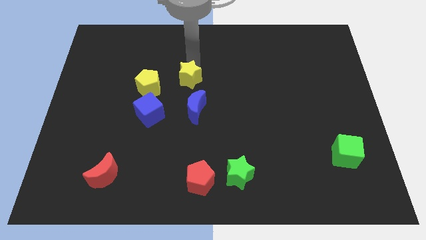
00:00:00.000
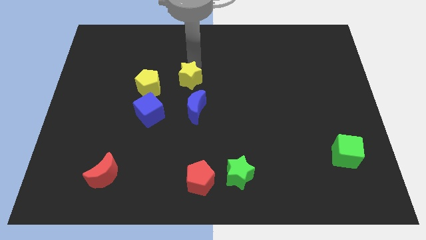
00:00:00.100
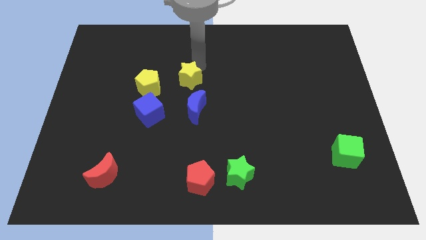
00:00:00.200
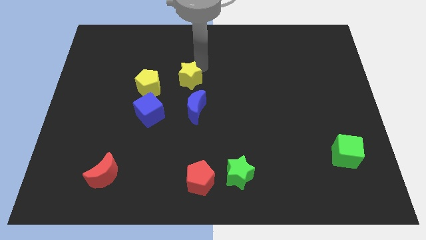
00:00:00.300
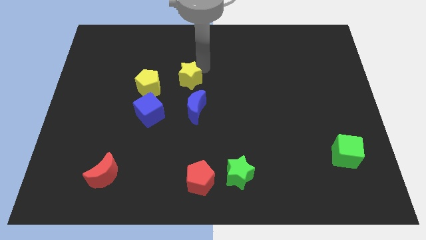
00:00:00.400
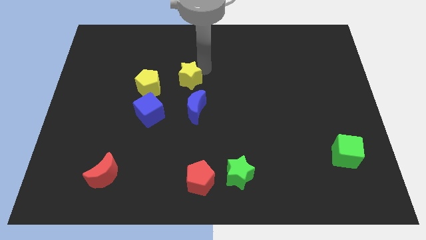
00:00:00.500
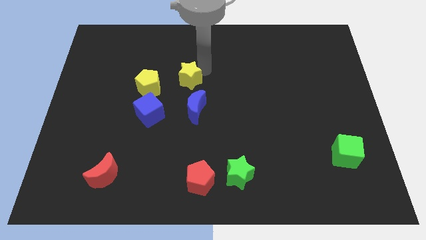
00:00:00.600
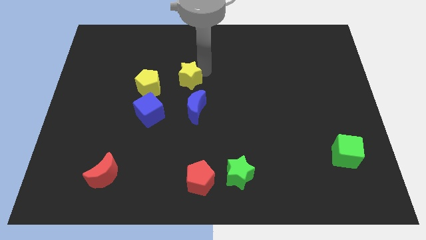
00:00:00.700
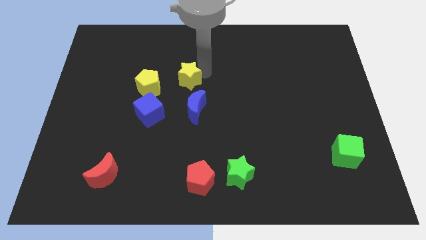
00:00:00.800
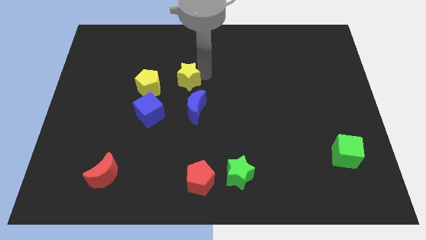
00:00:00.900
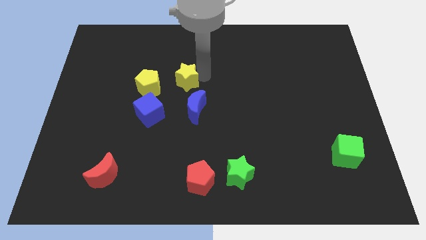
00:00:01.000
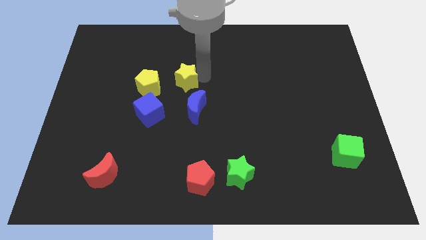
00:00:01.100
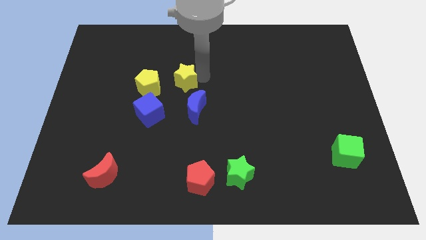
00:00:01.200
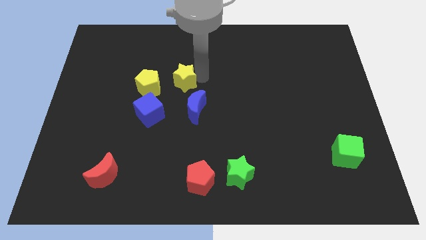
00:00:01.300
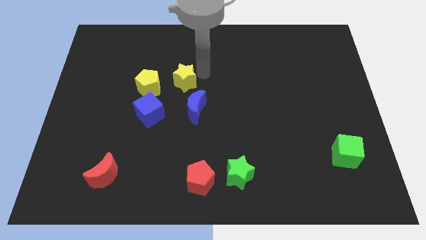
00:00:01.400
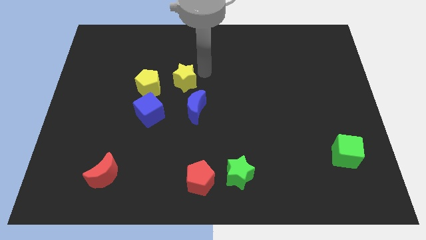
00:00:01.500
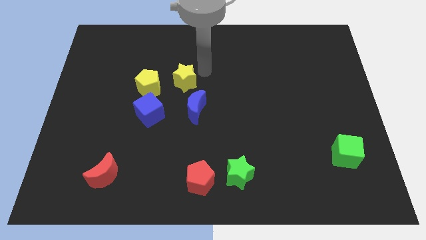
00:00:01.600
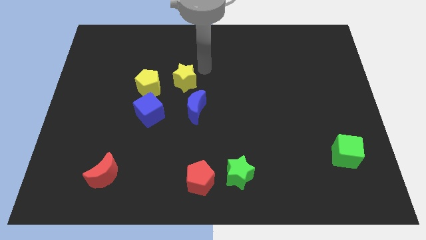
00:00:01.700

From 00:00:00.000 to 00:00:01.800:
put the yellow star on the right side of the yellow pentagon

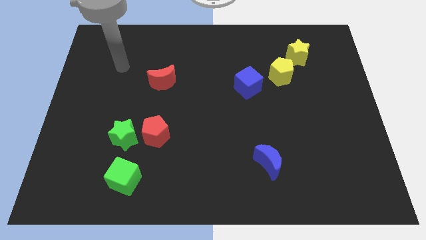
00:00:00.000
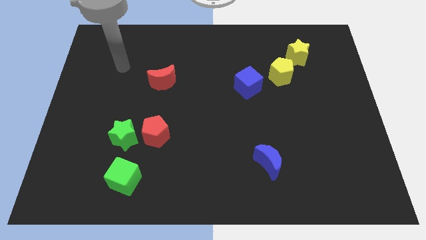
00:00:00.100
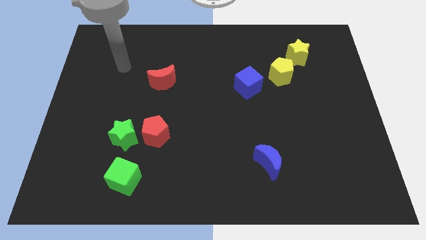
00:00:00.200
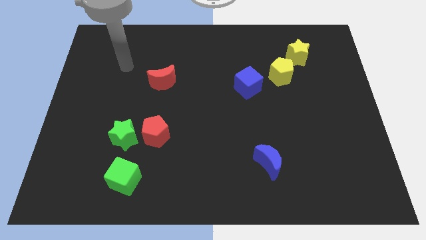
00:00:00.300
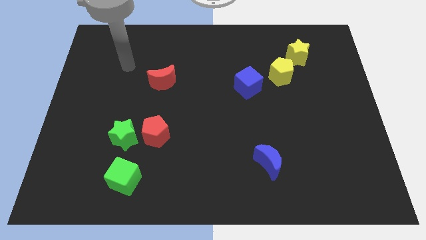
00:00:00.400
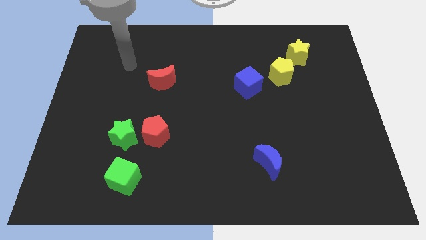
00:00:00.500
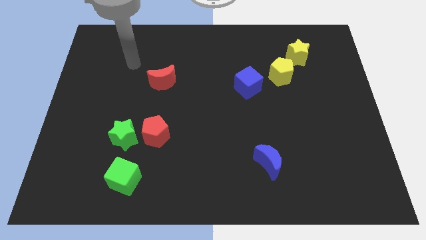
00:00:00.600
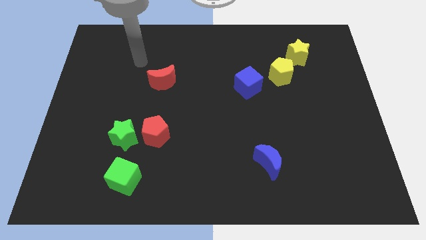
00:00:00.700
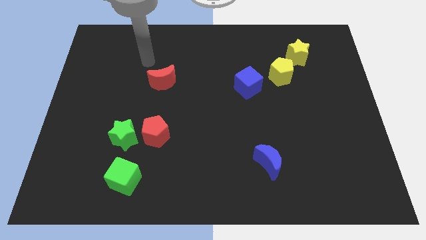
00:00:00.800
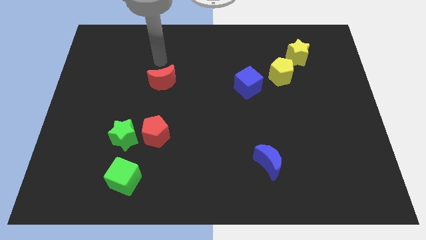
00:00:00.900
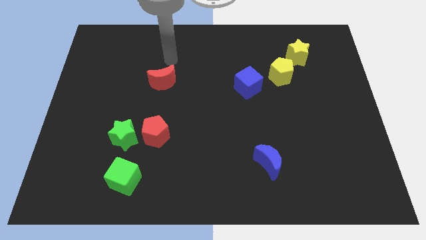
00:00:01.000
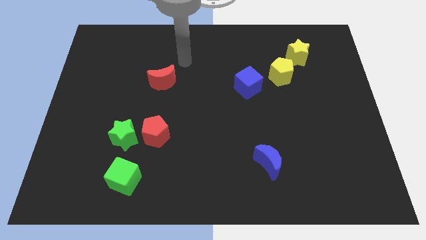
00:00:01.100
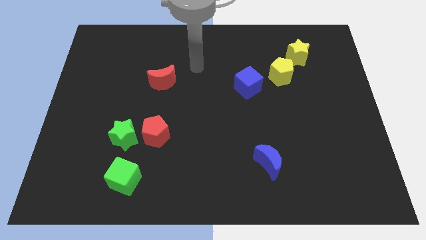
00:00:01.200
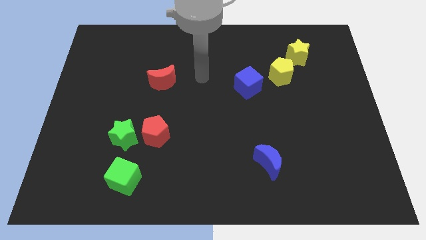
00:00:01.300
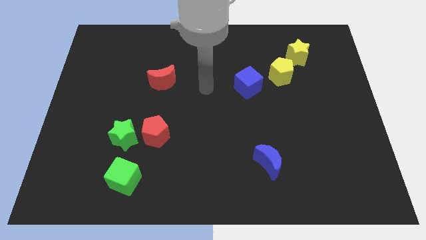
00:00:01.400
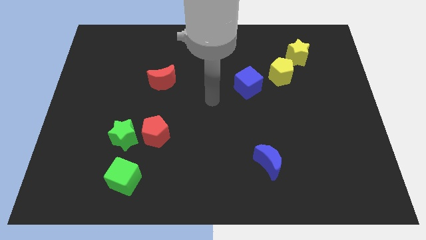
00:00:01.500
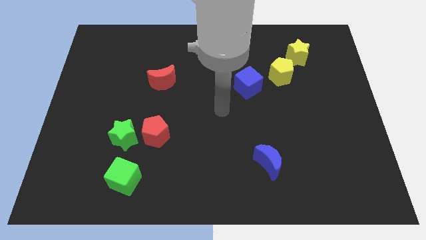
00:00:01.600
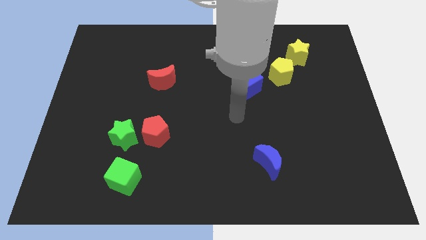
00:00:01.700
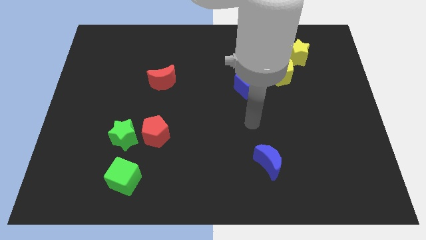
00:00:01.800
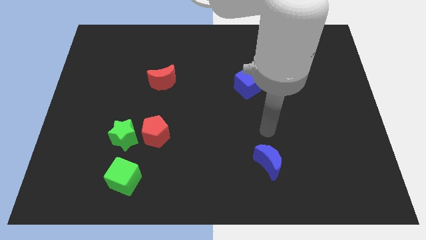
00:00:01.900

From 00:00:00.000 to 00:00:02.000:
place your arm to the top of the blue crescent

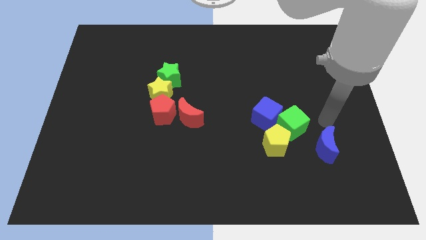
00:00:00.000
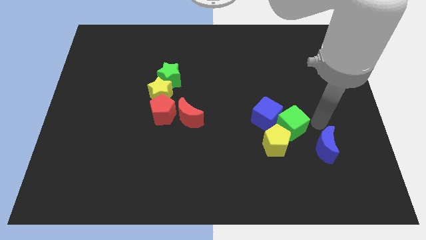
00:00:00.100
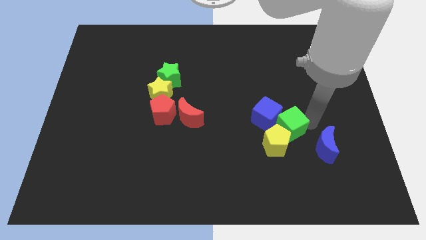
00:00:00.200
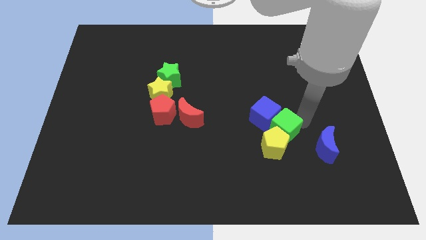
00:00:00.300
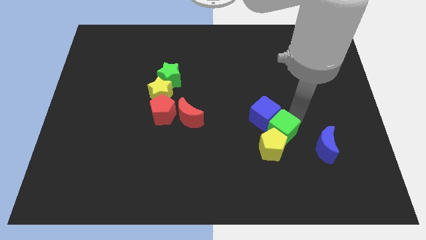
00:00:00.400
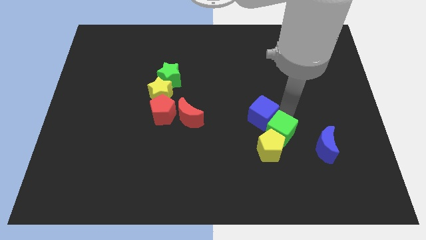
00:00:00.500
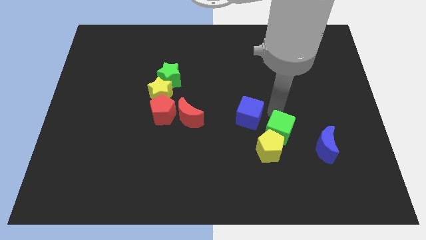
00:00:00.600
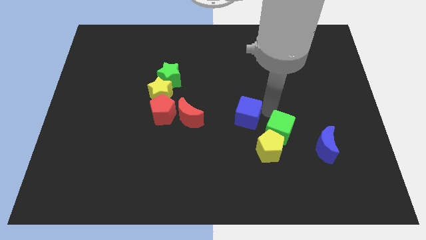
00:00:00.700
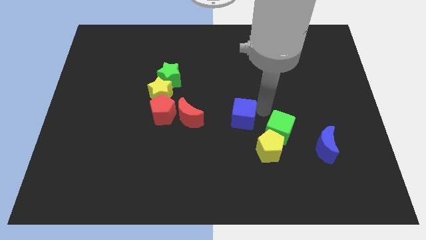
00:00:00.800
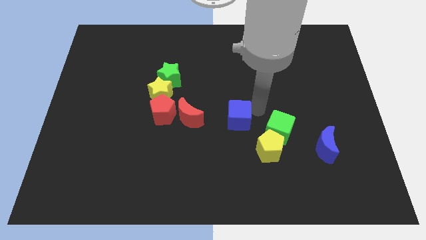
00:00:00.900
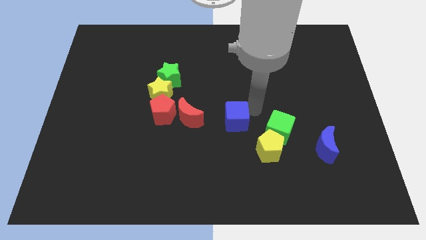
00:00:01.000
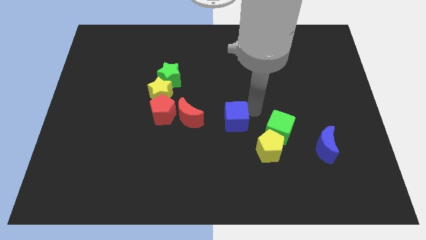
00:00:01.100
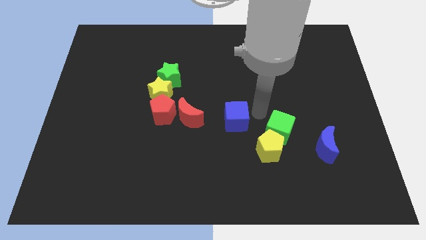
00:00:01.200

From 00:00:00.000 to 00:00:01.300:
separate the blue cube from the green cube

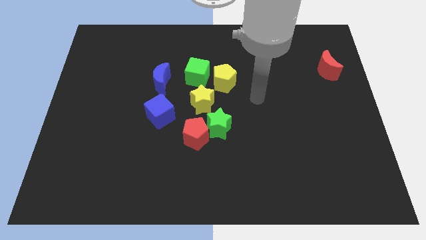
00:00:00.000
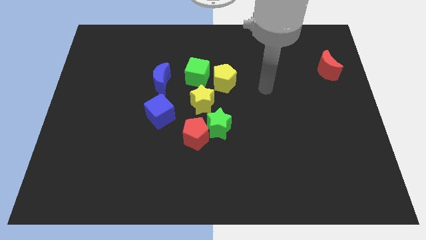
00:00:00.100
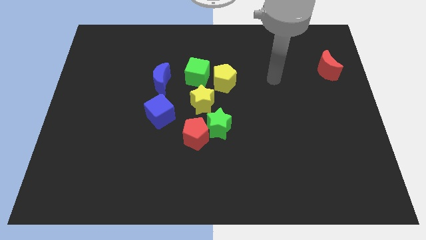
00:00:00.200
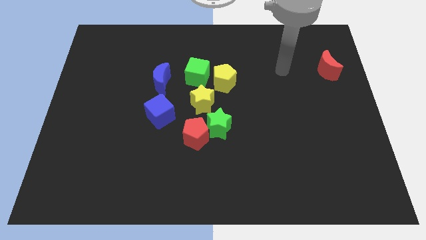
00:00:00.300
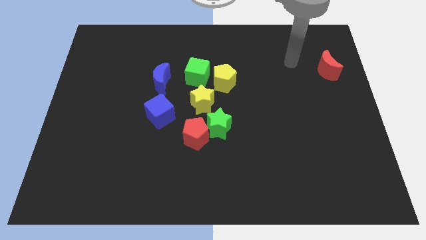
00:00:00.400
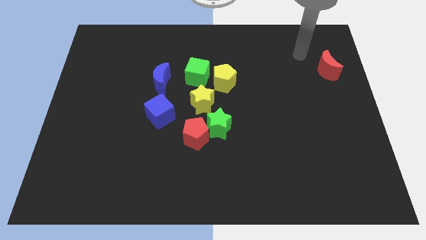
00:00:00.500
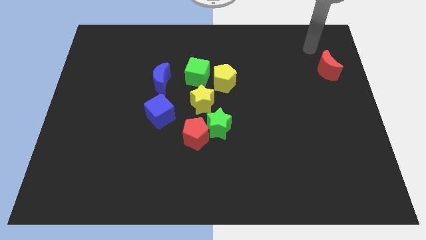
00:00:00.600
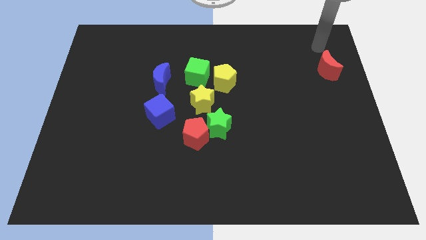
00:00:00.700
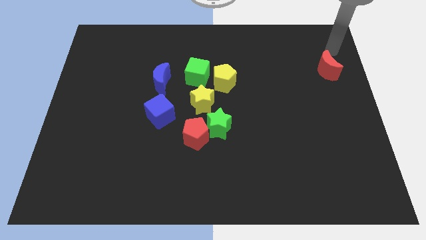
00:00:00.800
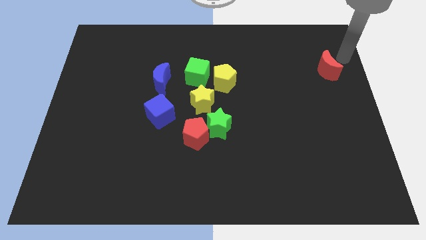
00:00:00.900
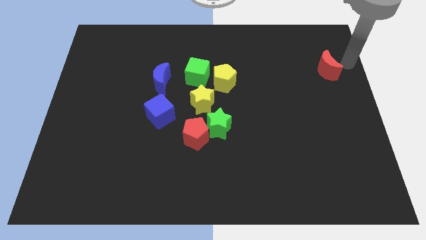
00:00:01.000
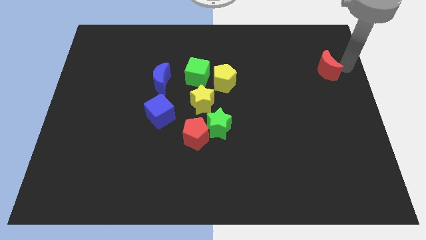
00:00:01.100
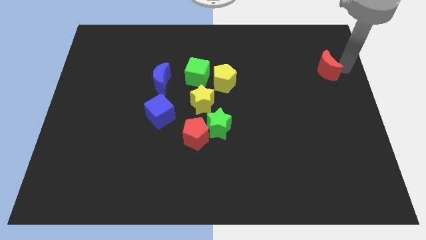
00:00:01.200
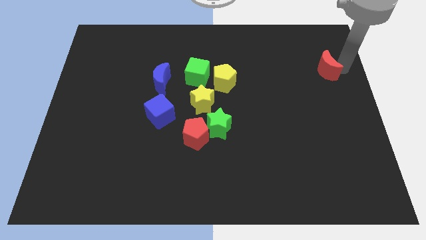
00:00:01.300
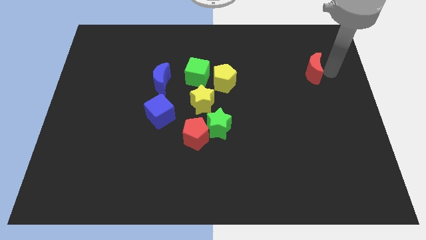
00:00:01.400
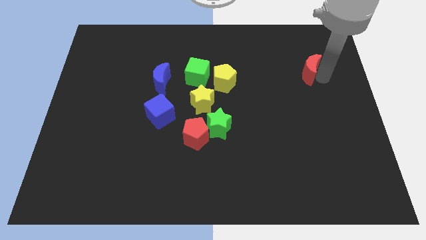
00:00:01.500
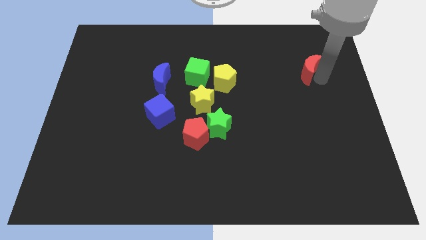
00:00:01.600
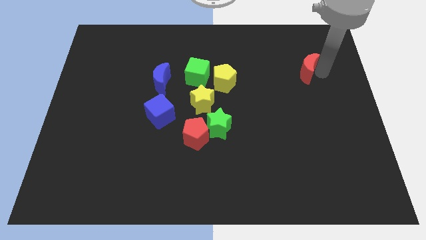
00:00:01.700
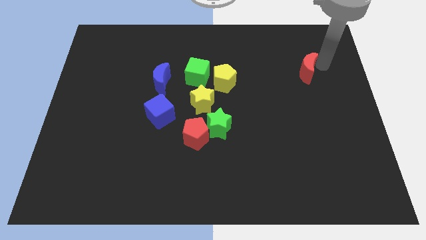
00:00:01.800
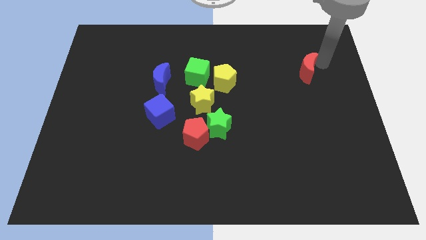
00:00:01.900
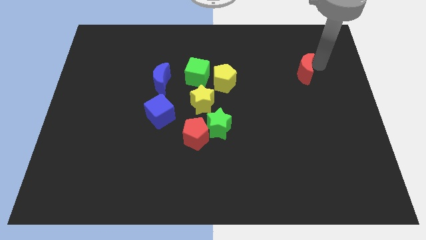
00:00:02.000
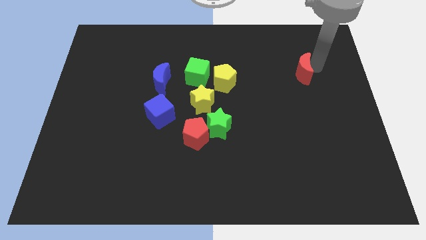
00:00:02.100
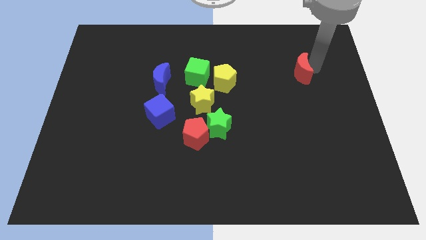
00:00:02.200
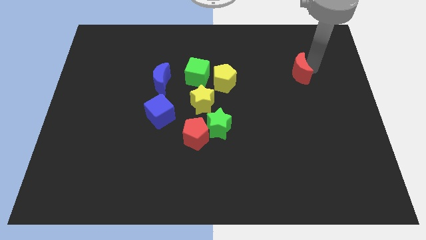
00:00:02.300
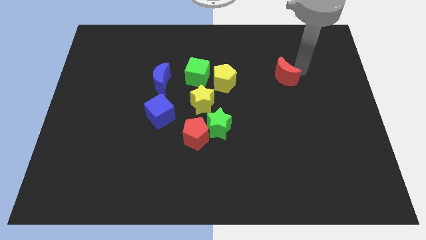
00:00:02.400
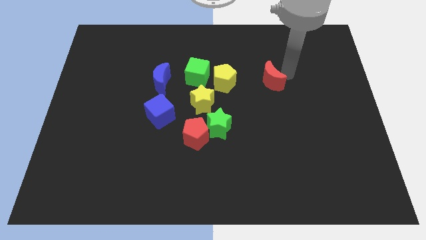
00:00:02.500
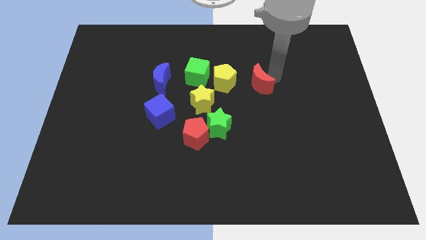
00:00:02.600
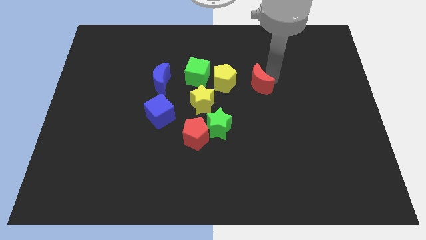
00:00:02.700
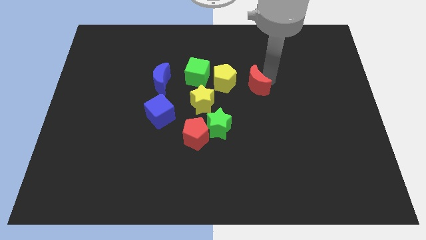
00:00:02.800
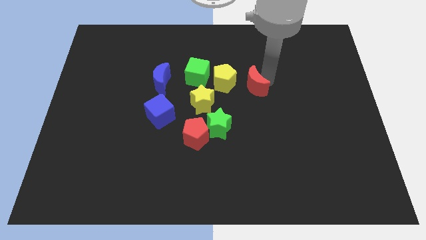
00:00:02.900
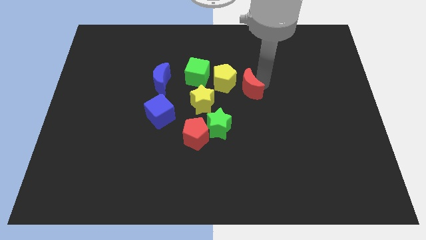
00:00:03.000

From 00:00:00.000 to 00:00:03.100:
move red moon towards the center

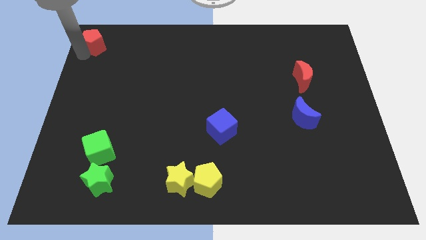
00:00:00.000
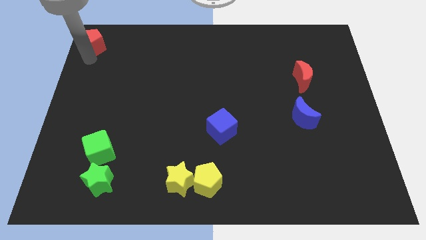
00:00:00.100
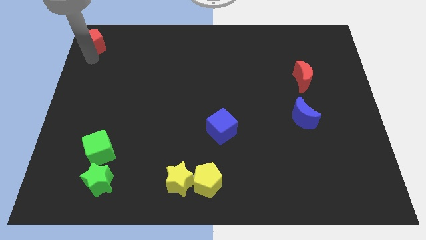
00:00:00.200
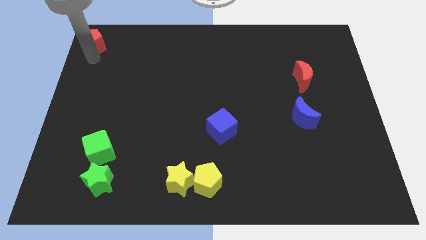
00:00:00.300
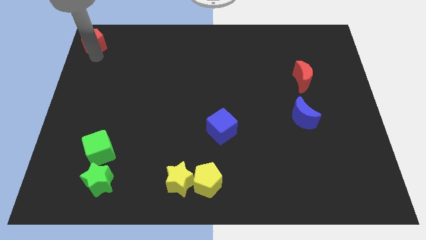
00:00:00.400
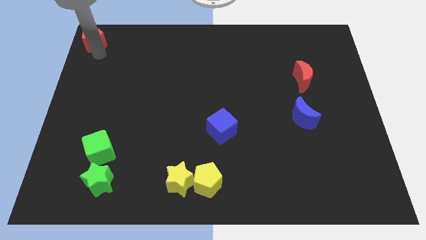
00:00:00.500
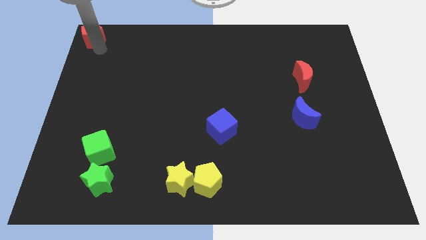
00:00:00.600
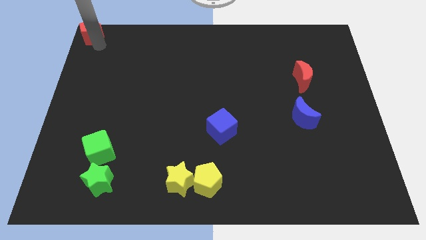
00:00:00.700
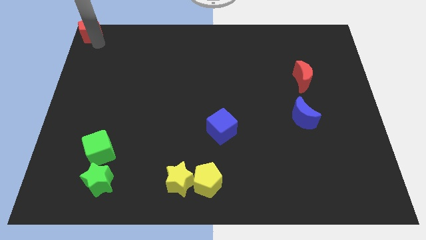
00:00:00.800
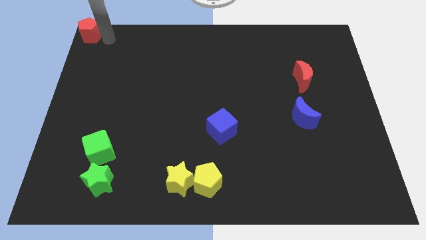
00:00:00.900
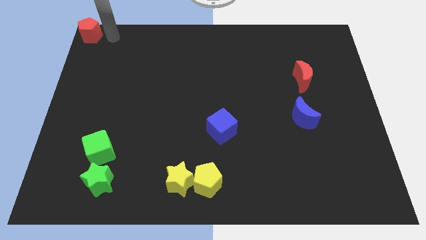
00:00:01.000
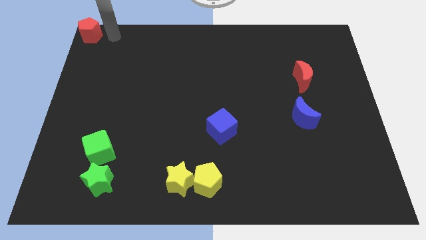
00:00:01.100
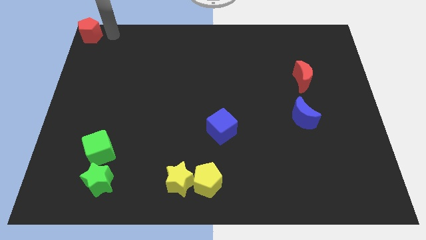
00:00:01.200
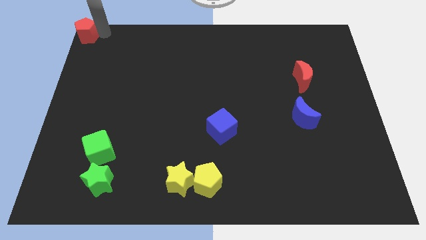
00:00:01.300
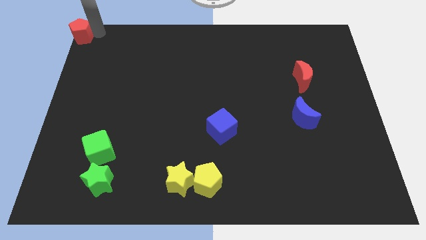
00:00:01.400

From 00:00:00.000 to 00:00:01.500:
push the red pentagon to the top left corner
